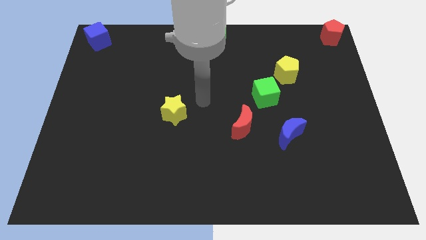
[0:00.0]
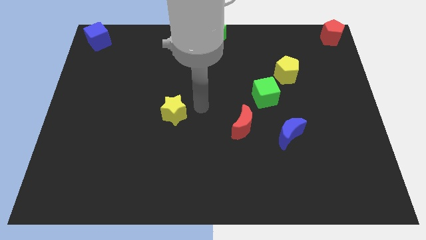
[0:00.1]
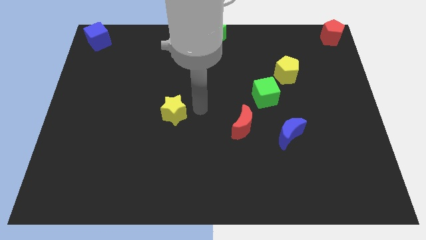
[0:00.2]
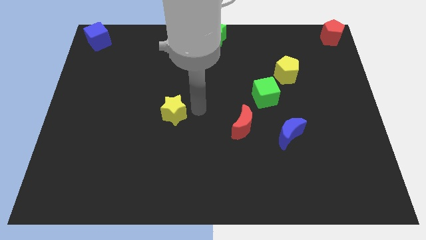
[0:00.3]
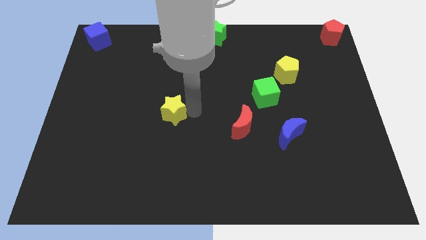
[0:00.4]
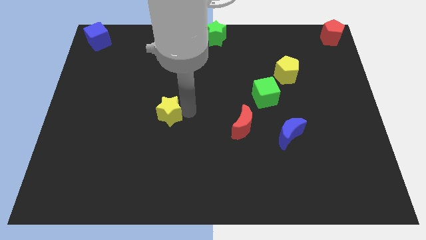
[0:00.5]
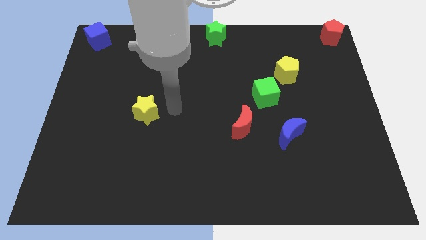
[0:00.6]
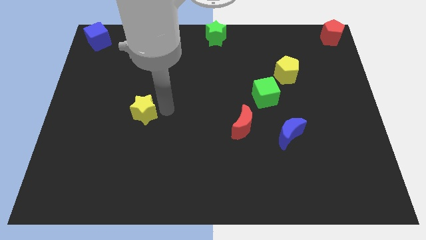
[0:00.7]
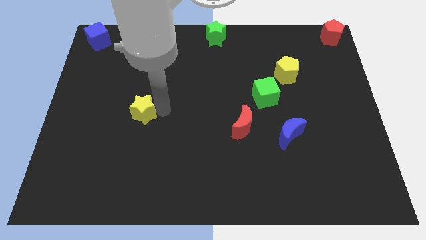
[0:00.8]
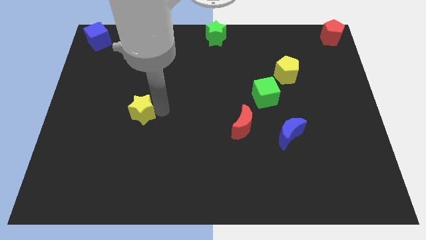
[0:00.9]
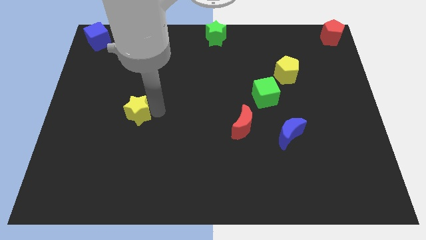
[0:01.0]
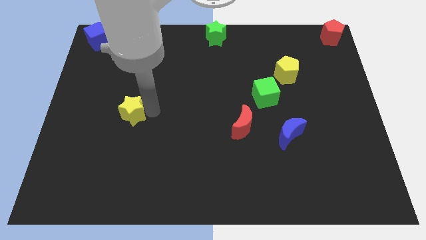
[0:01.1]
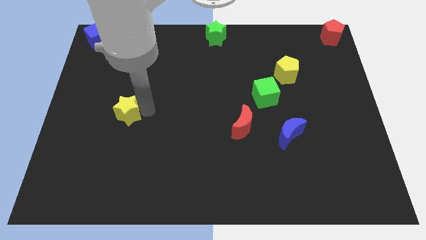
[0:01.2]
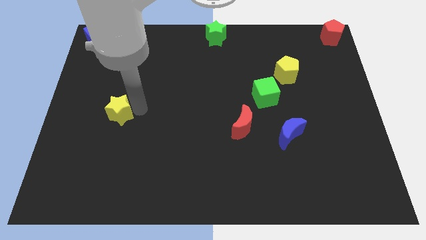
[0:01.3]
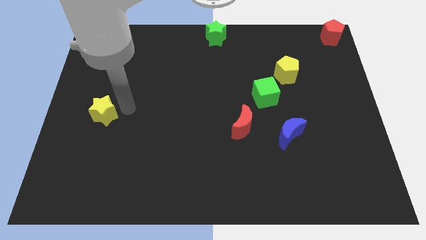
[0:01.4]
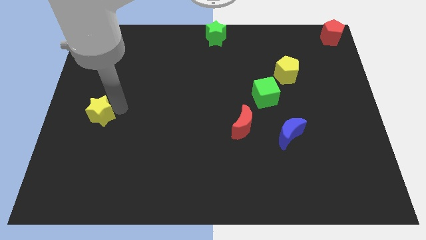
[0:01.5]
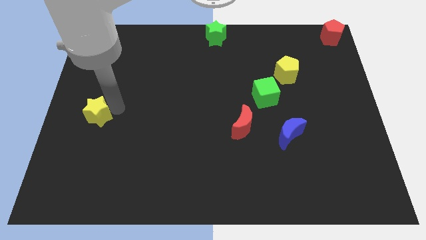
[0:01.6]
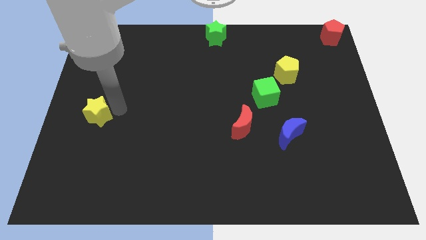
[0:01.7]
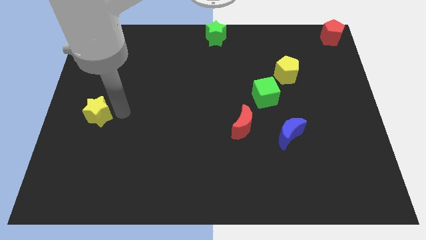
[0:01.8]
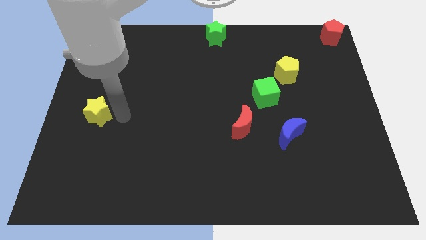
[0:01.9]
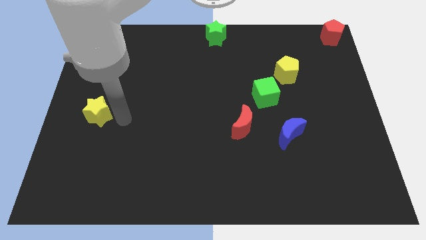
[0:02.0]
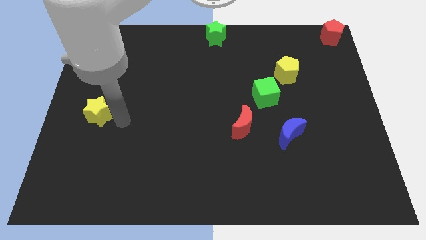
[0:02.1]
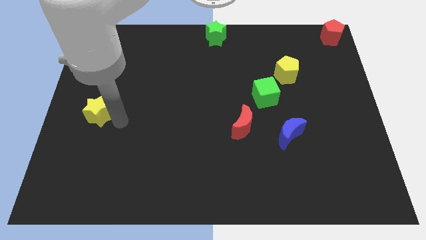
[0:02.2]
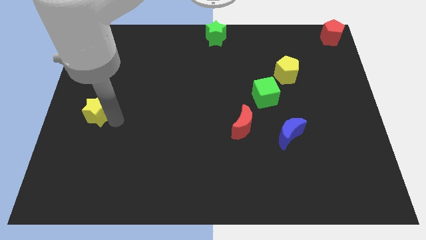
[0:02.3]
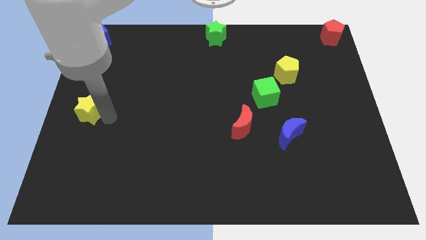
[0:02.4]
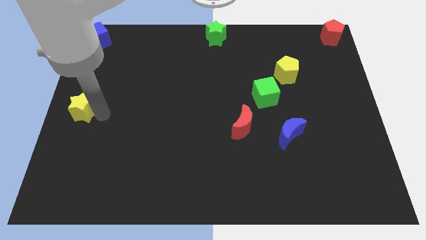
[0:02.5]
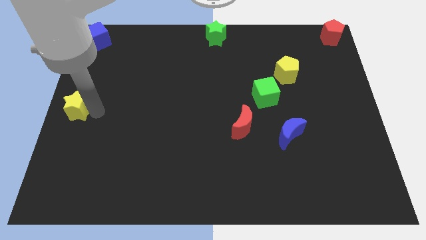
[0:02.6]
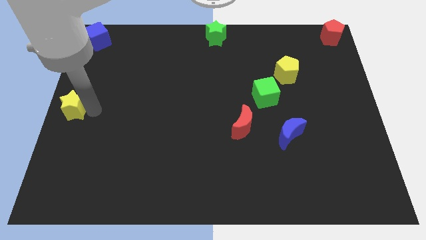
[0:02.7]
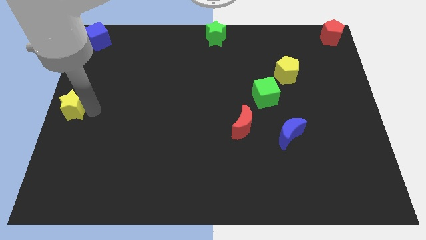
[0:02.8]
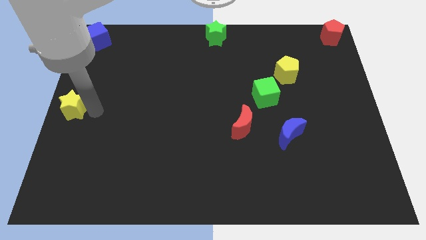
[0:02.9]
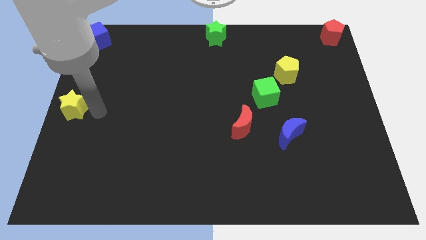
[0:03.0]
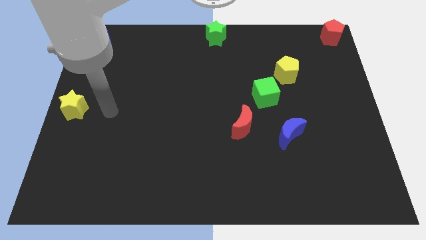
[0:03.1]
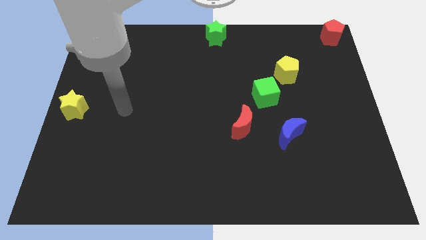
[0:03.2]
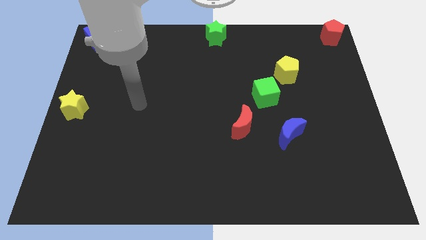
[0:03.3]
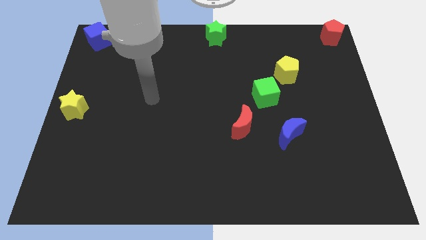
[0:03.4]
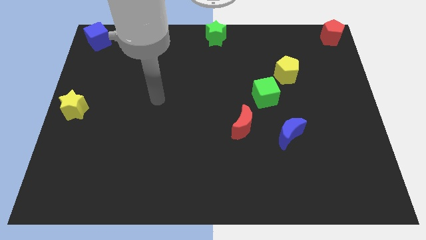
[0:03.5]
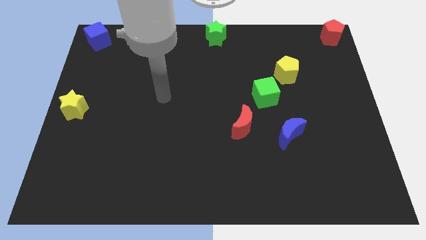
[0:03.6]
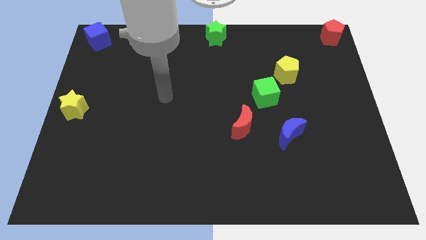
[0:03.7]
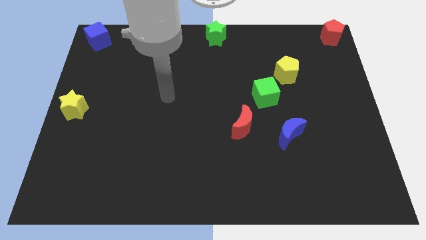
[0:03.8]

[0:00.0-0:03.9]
move the yellow star to the left center of the board

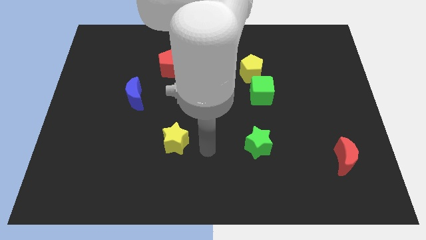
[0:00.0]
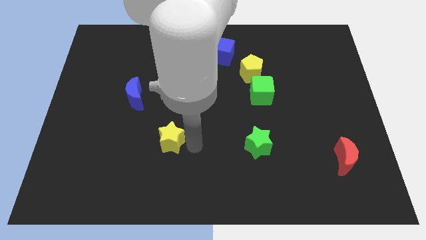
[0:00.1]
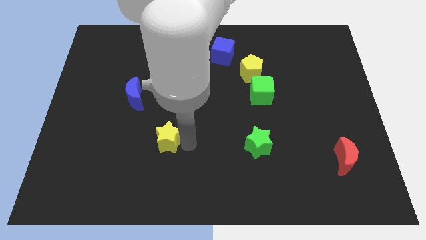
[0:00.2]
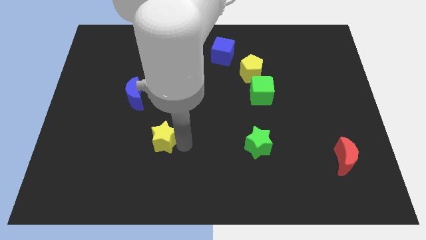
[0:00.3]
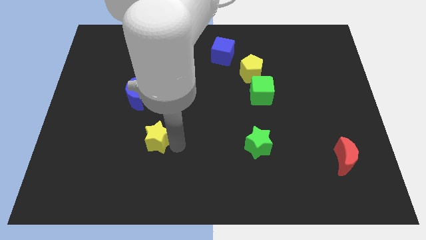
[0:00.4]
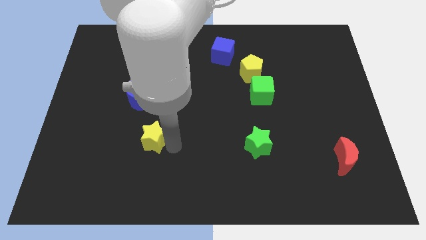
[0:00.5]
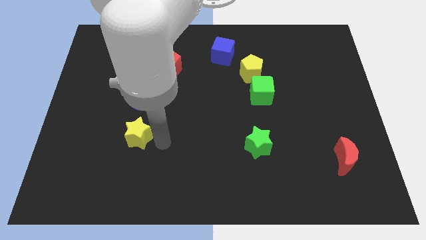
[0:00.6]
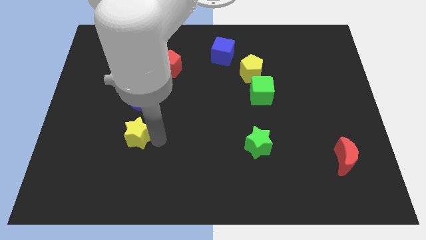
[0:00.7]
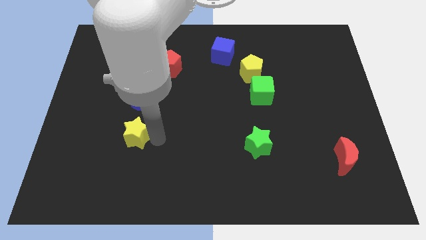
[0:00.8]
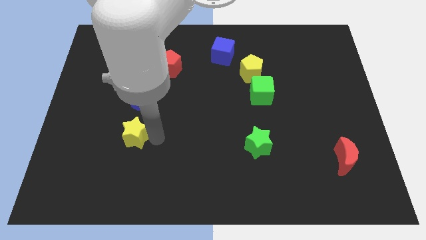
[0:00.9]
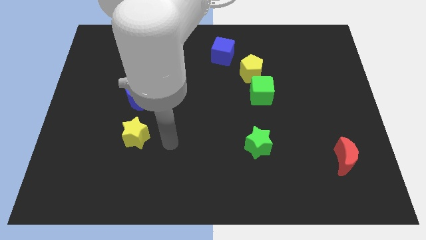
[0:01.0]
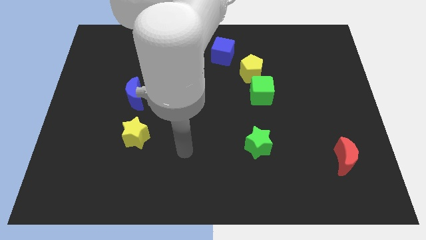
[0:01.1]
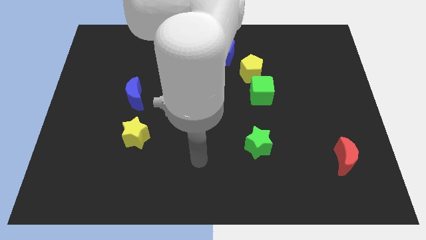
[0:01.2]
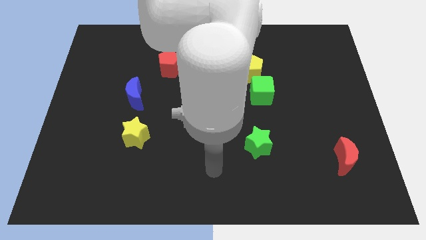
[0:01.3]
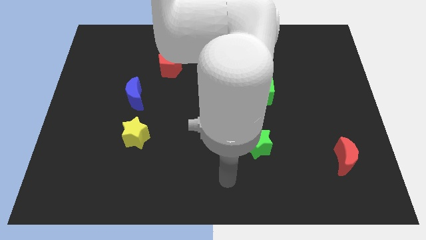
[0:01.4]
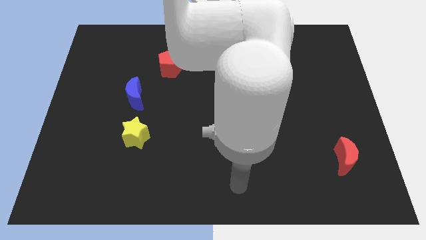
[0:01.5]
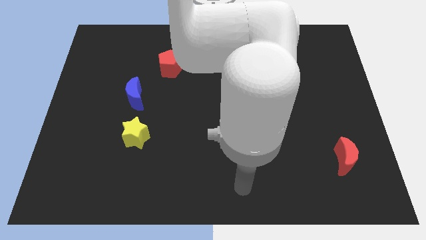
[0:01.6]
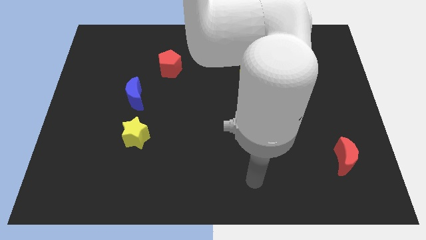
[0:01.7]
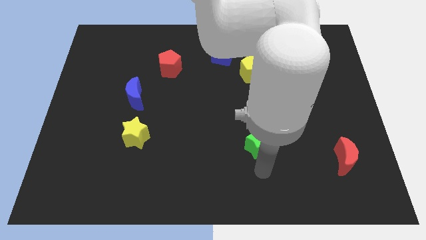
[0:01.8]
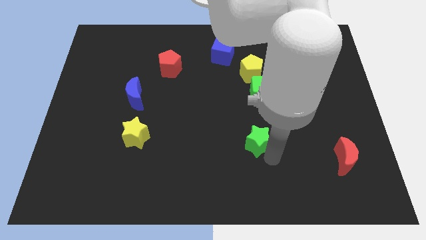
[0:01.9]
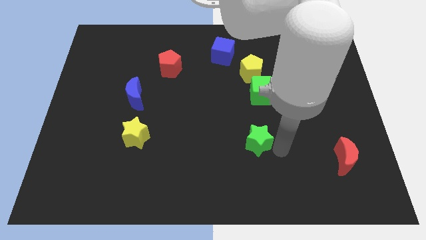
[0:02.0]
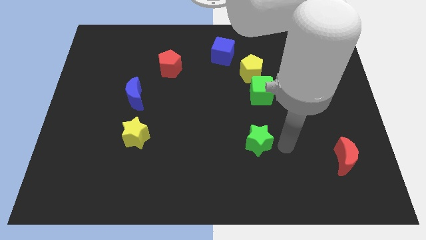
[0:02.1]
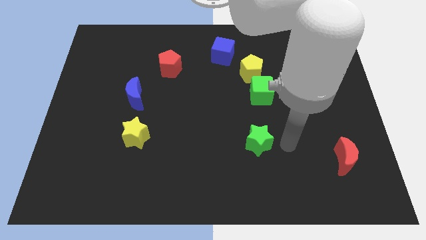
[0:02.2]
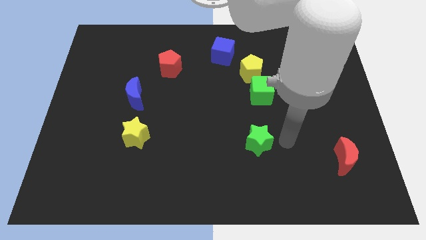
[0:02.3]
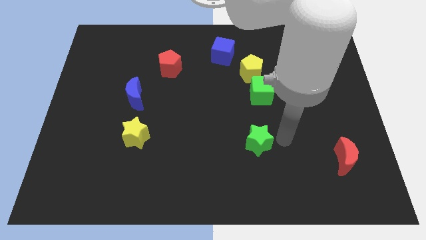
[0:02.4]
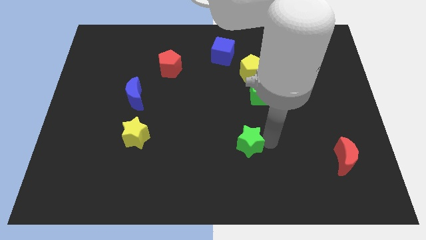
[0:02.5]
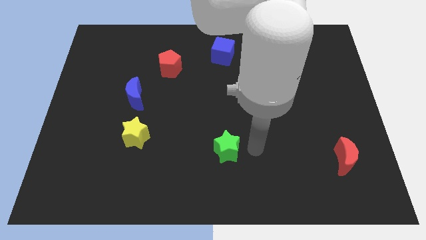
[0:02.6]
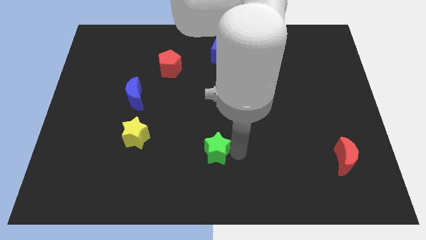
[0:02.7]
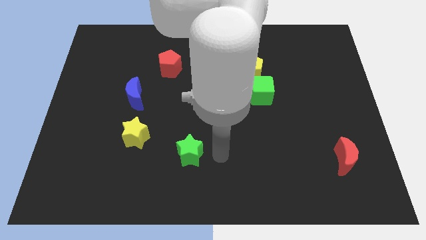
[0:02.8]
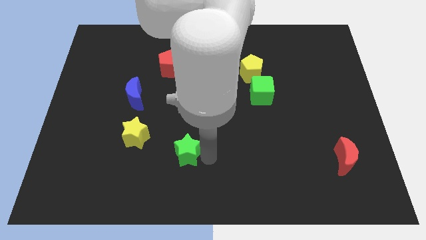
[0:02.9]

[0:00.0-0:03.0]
push the yellow star and green star towards left side

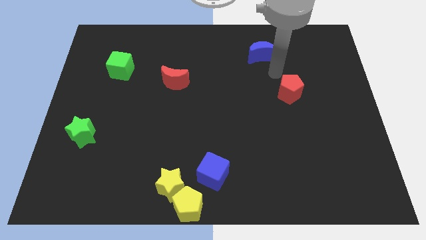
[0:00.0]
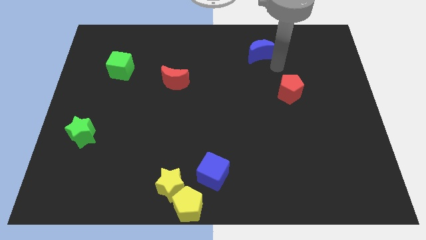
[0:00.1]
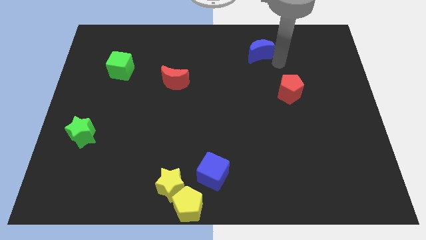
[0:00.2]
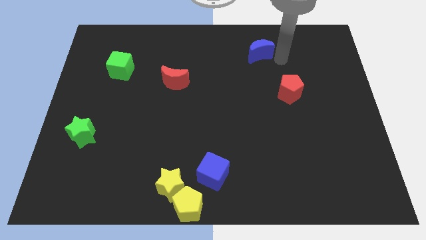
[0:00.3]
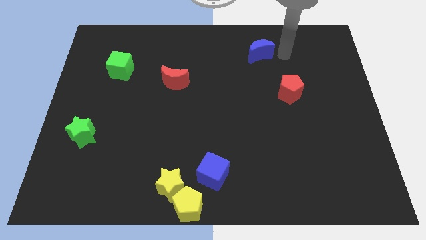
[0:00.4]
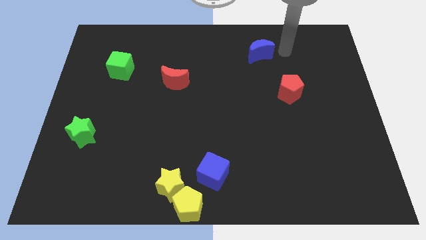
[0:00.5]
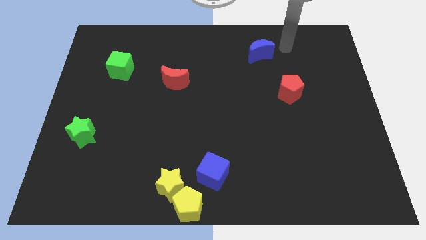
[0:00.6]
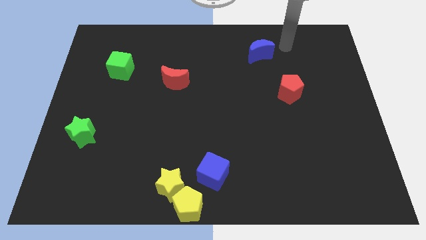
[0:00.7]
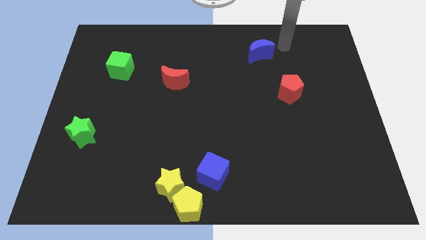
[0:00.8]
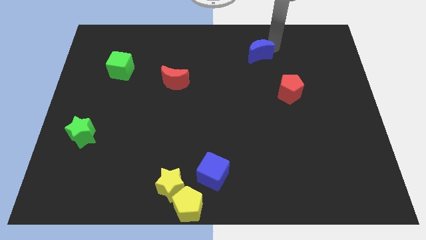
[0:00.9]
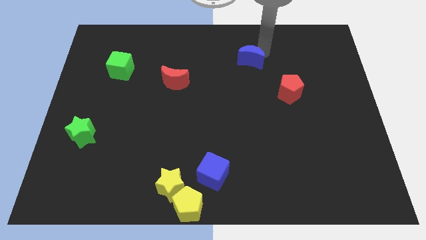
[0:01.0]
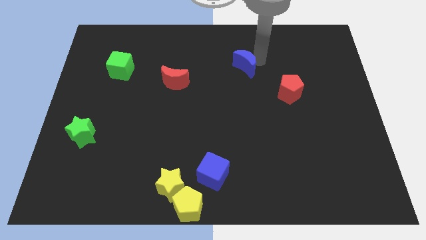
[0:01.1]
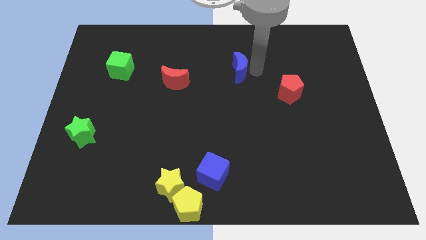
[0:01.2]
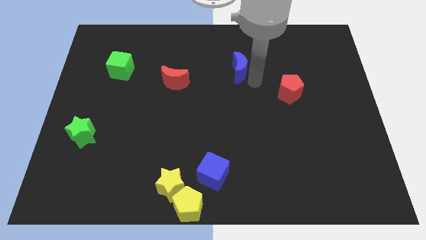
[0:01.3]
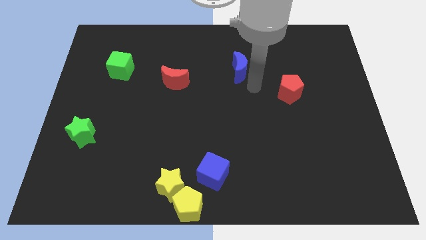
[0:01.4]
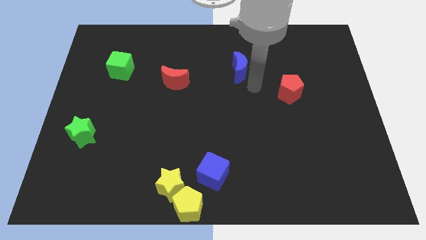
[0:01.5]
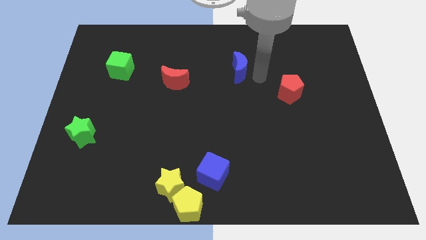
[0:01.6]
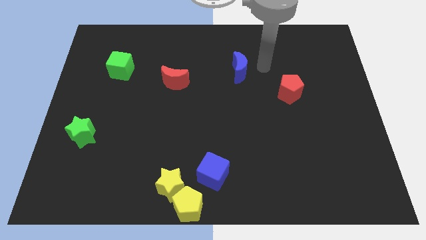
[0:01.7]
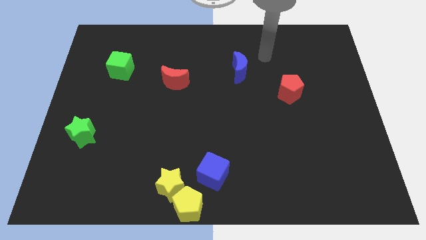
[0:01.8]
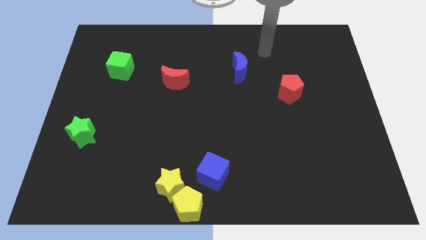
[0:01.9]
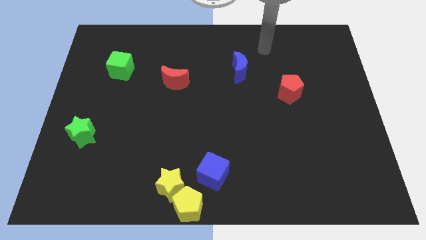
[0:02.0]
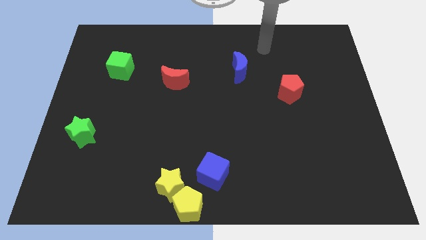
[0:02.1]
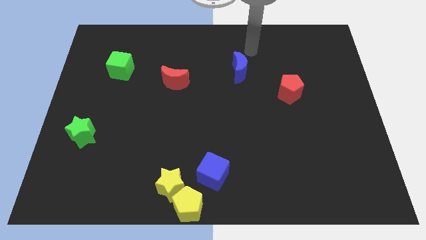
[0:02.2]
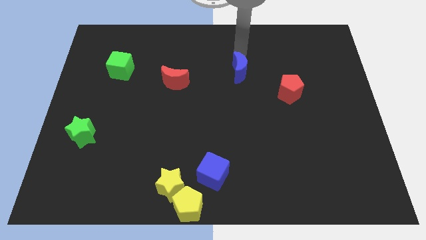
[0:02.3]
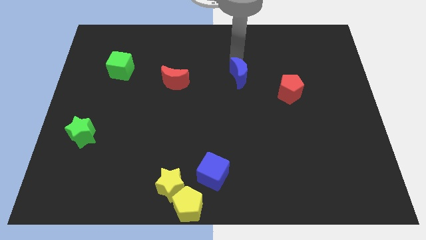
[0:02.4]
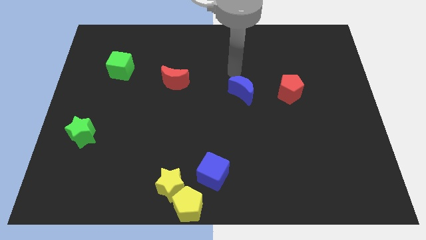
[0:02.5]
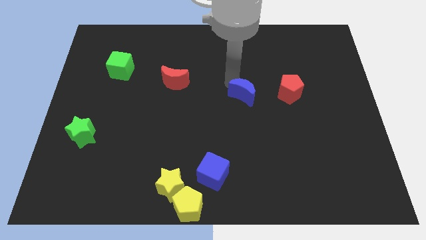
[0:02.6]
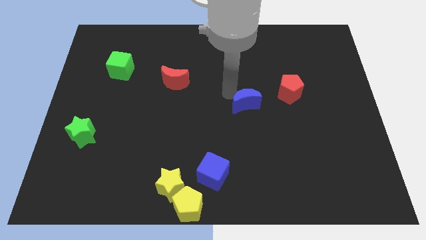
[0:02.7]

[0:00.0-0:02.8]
move the blue crescent to the left of the red pentagon
